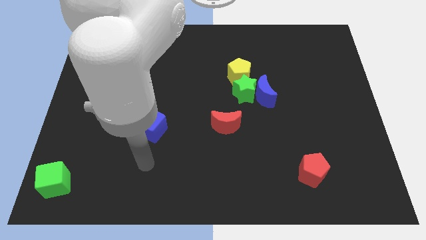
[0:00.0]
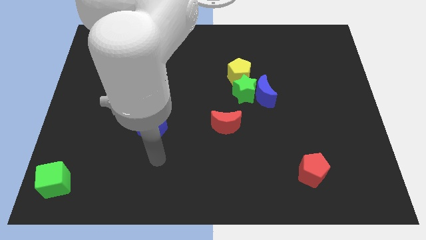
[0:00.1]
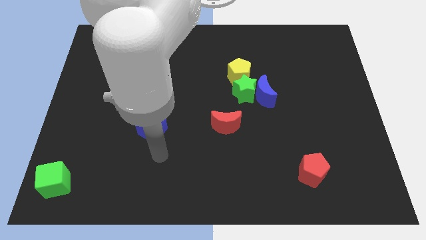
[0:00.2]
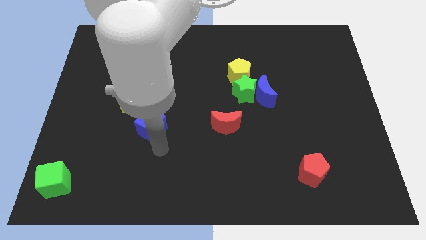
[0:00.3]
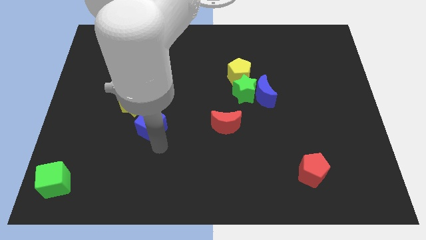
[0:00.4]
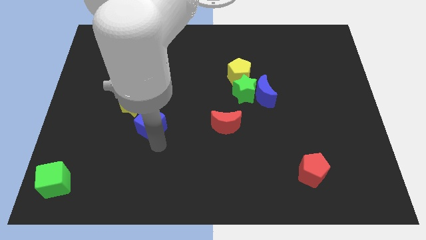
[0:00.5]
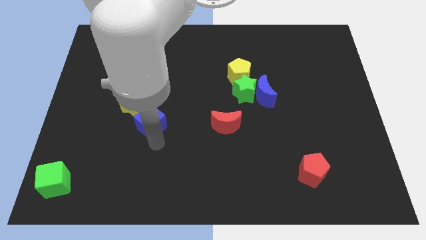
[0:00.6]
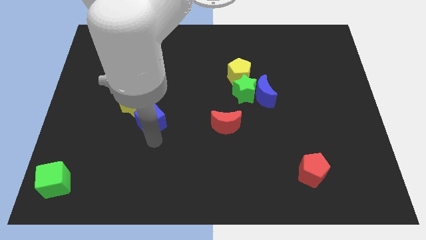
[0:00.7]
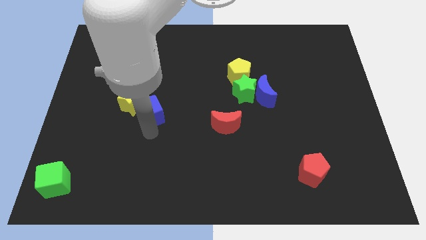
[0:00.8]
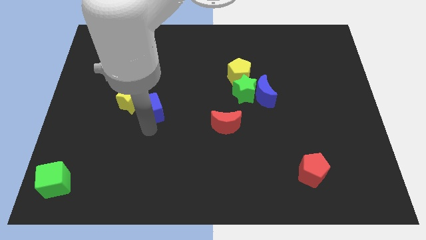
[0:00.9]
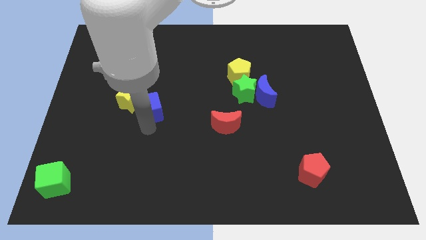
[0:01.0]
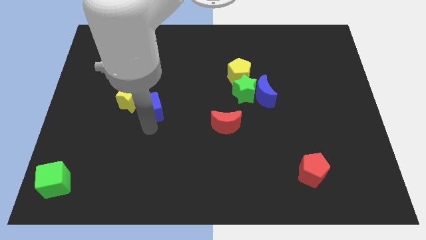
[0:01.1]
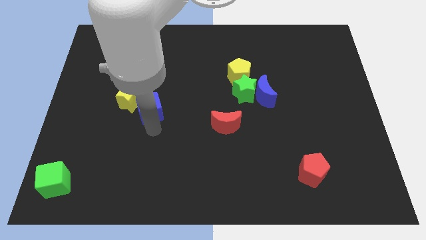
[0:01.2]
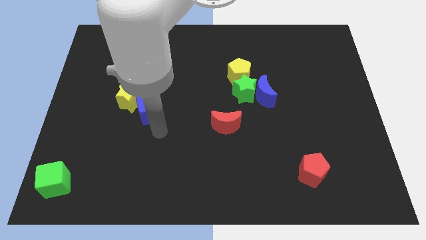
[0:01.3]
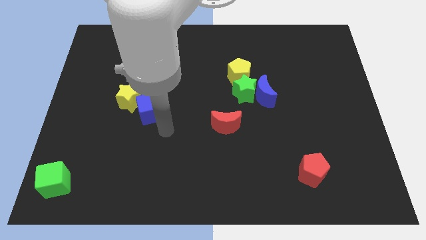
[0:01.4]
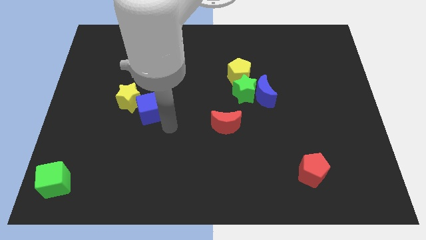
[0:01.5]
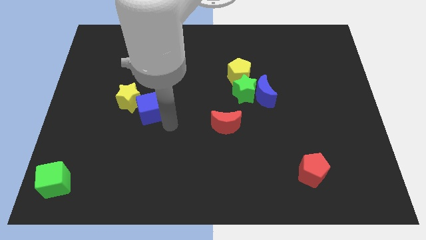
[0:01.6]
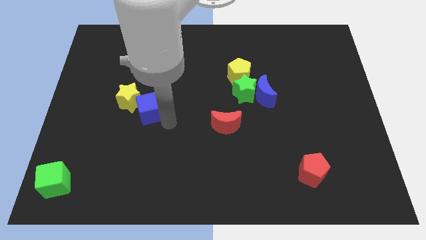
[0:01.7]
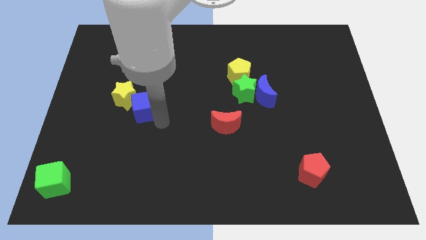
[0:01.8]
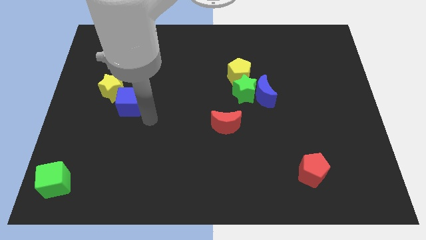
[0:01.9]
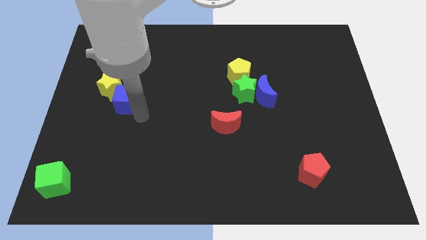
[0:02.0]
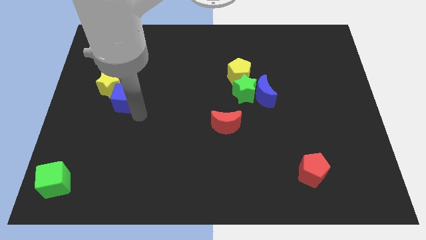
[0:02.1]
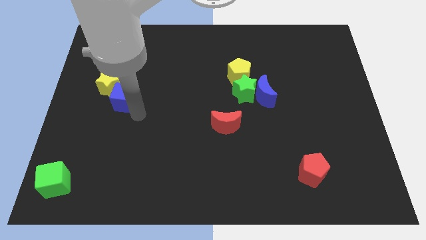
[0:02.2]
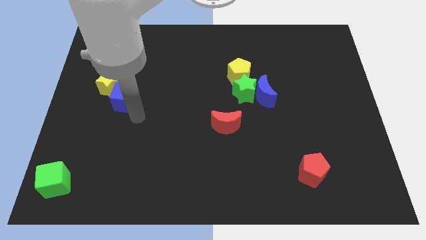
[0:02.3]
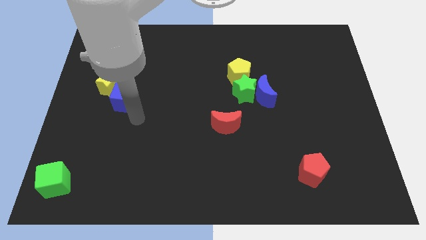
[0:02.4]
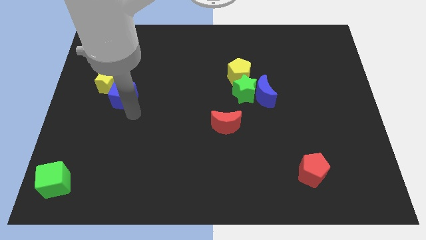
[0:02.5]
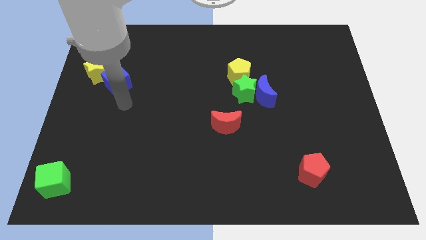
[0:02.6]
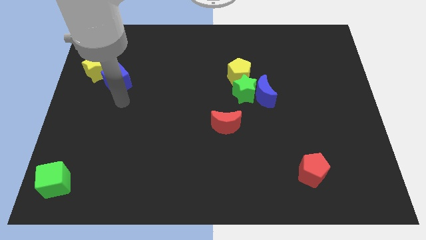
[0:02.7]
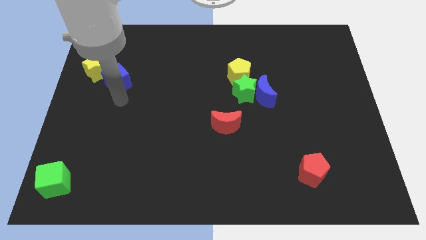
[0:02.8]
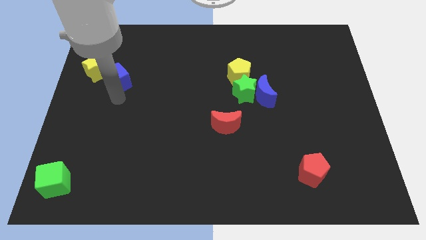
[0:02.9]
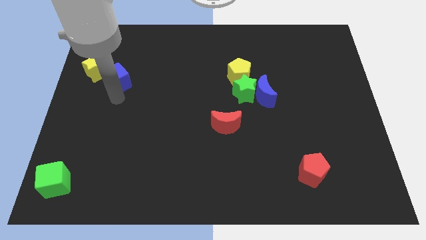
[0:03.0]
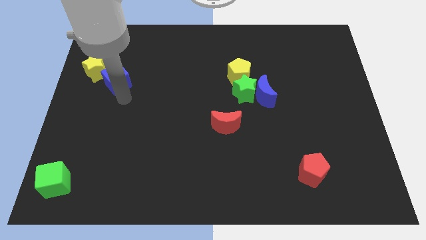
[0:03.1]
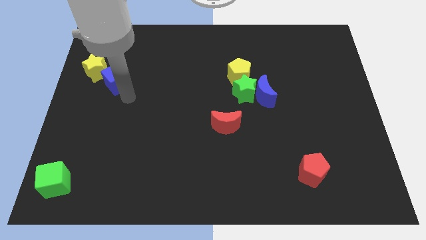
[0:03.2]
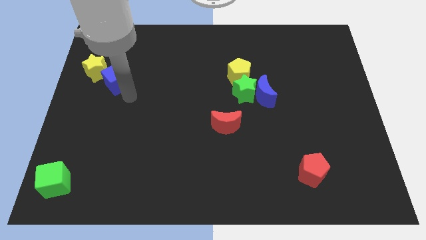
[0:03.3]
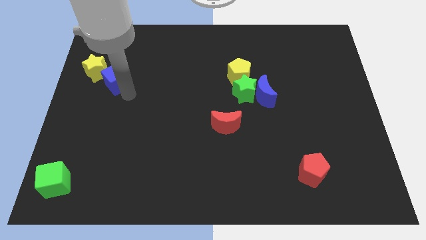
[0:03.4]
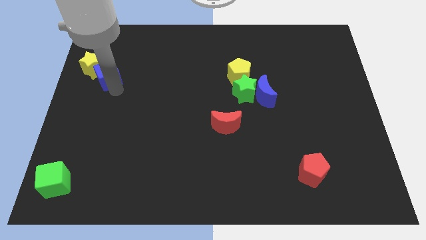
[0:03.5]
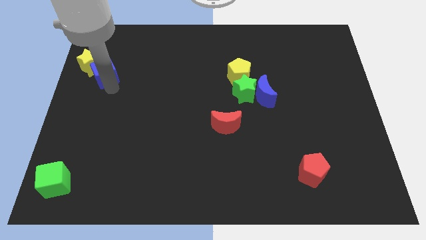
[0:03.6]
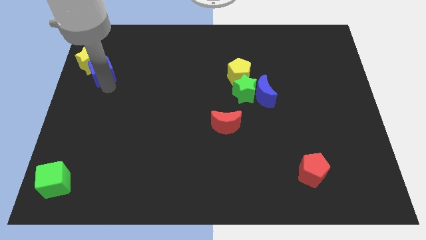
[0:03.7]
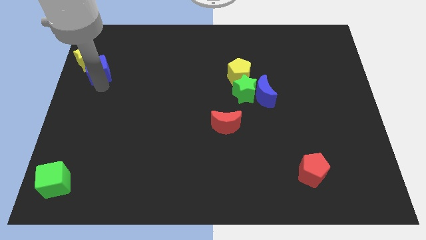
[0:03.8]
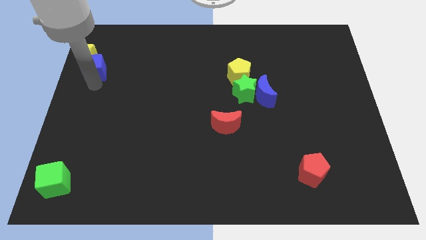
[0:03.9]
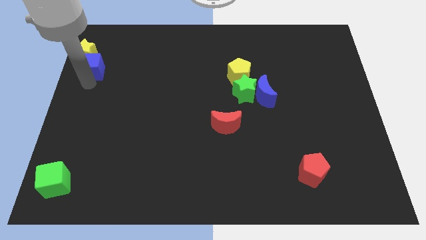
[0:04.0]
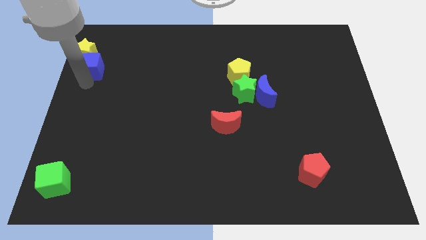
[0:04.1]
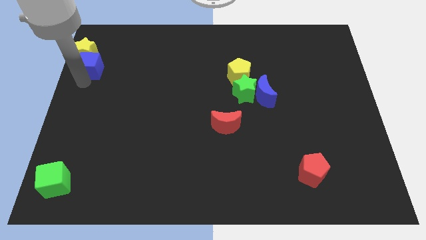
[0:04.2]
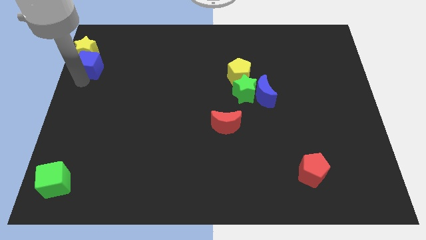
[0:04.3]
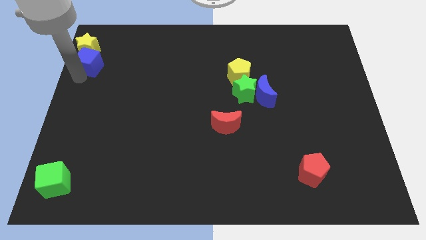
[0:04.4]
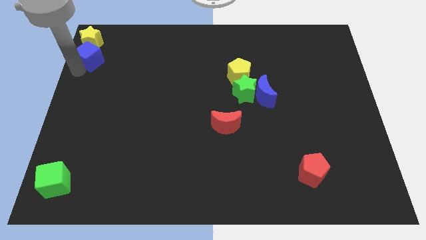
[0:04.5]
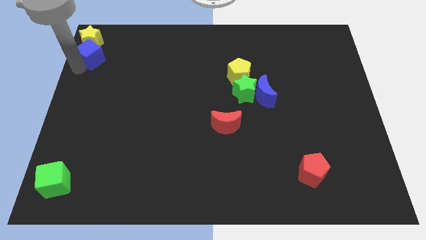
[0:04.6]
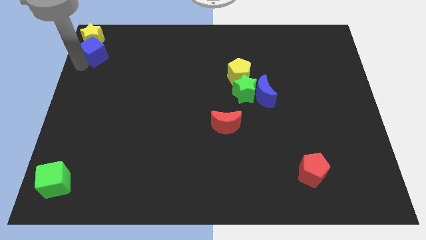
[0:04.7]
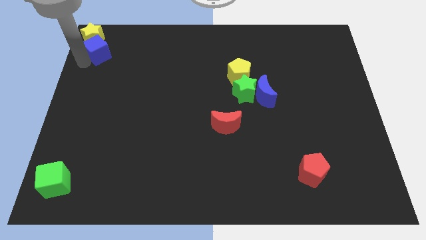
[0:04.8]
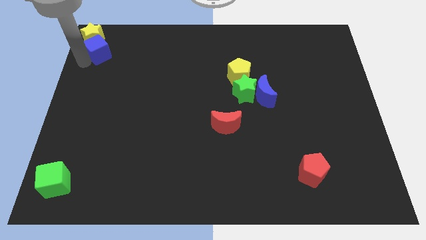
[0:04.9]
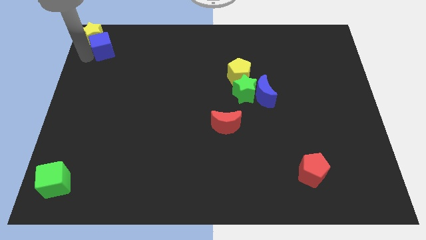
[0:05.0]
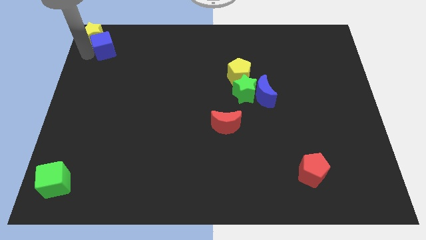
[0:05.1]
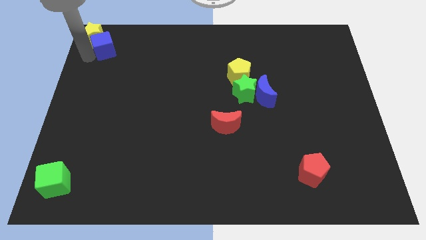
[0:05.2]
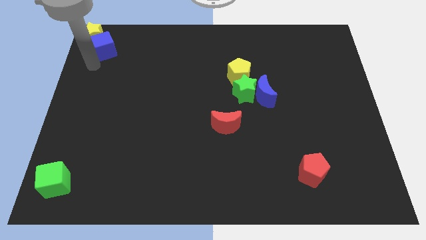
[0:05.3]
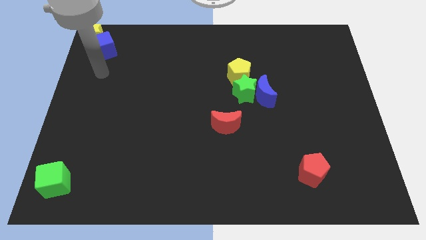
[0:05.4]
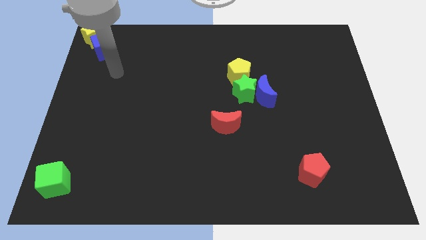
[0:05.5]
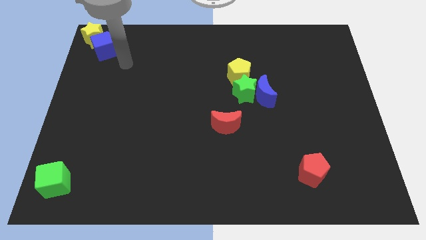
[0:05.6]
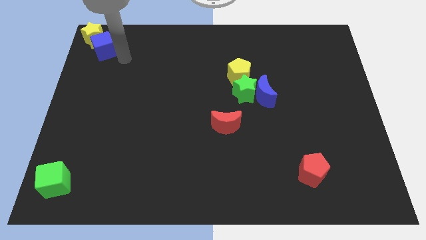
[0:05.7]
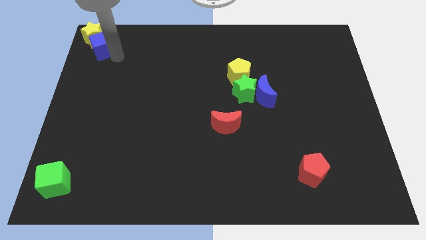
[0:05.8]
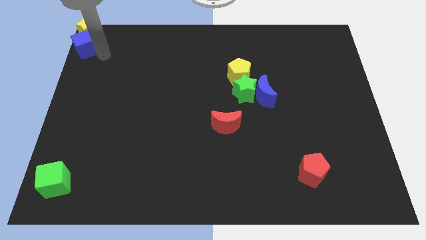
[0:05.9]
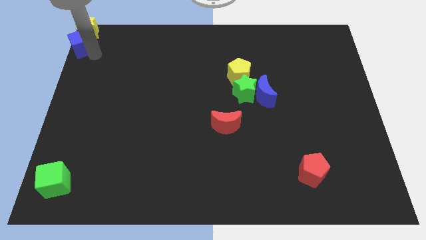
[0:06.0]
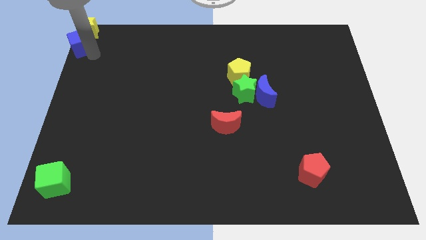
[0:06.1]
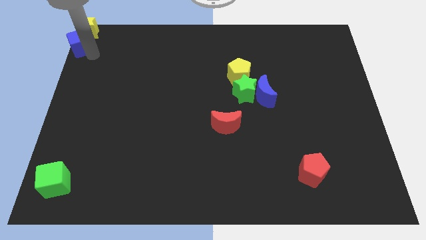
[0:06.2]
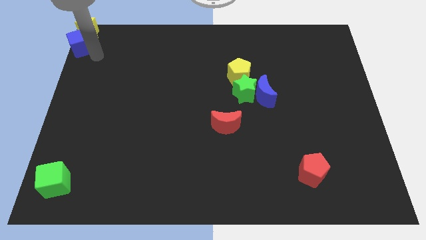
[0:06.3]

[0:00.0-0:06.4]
push the yellow star and the blue cube to the top left corner of the board

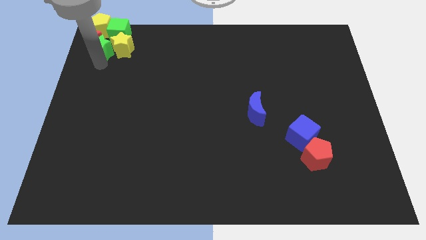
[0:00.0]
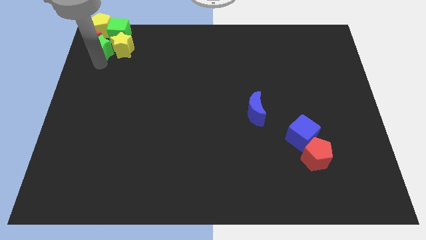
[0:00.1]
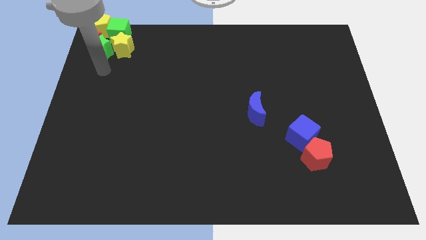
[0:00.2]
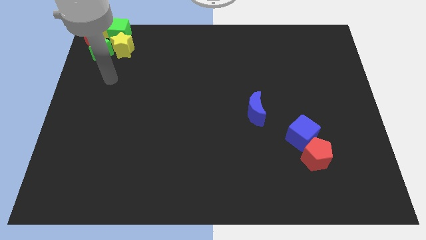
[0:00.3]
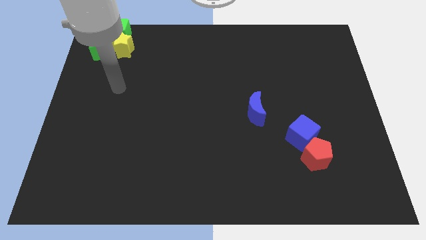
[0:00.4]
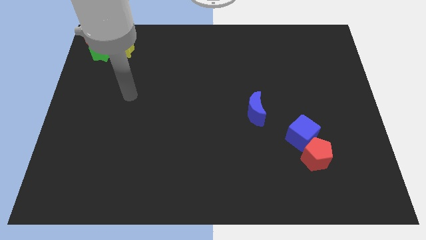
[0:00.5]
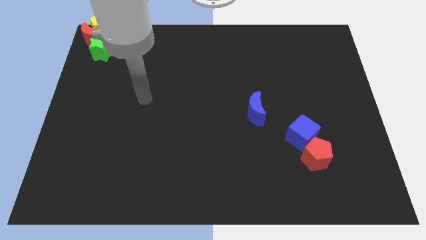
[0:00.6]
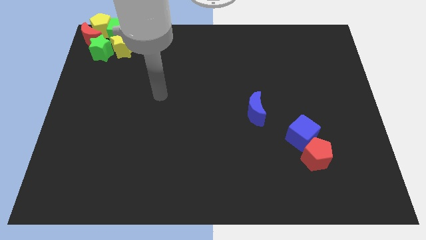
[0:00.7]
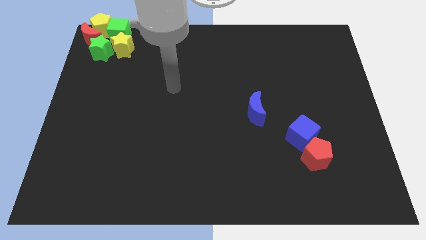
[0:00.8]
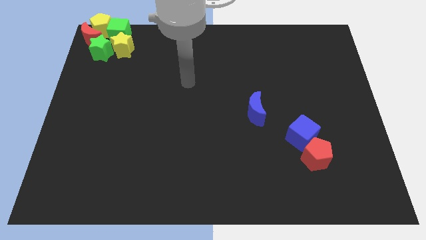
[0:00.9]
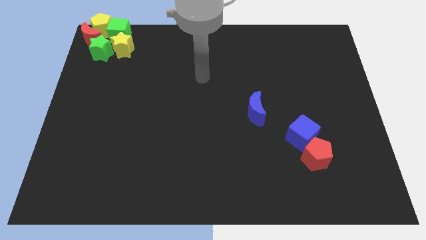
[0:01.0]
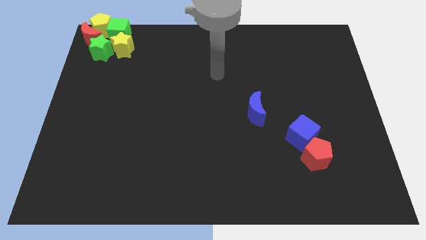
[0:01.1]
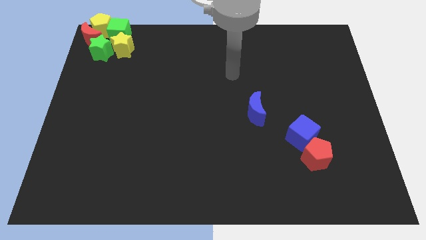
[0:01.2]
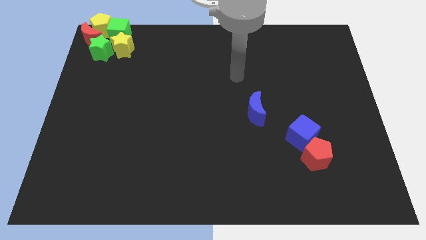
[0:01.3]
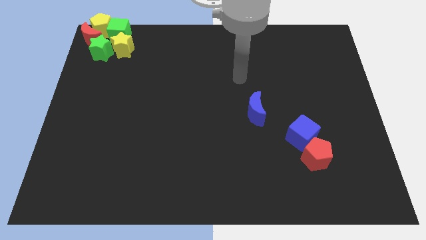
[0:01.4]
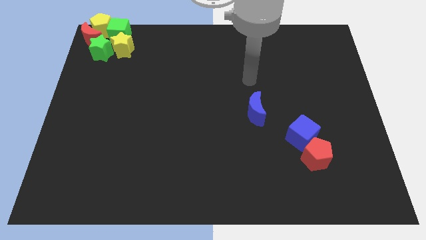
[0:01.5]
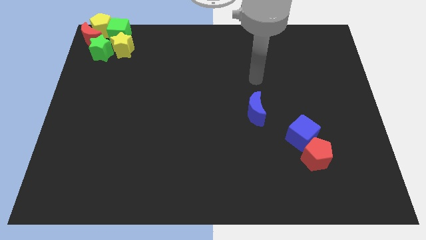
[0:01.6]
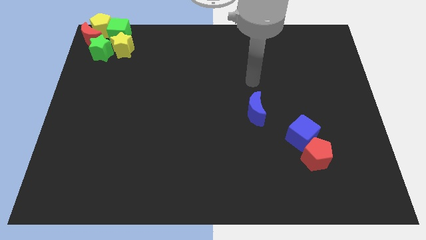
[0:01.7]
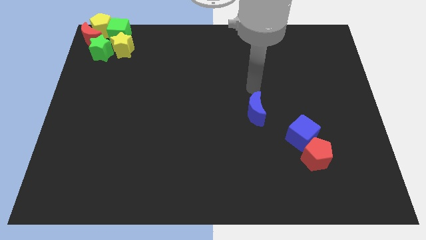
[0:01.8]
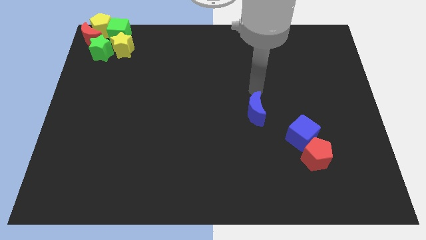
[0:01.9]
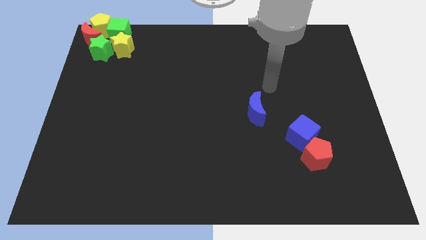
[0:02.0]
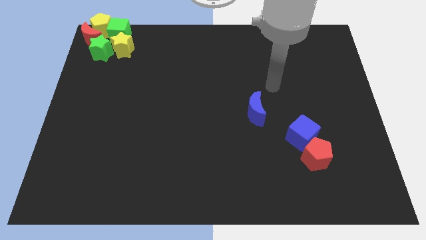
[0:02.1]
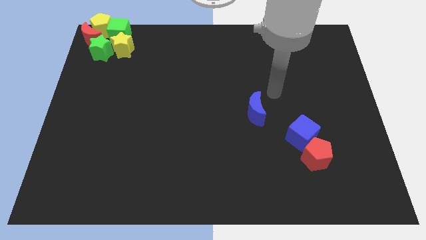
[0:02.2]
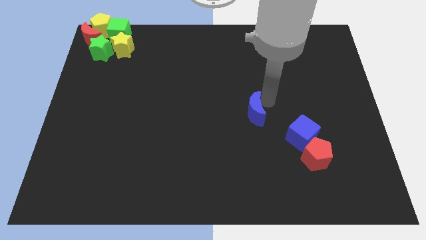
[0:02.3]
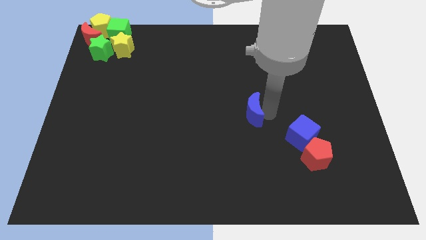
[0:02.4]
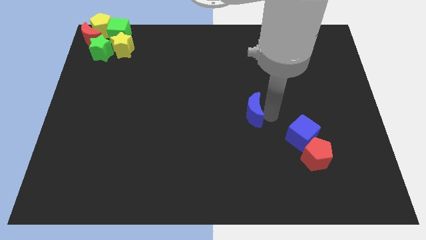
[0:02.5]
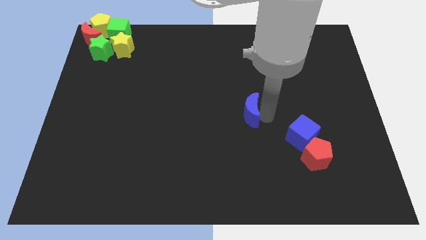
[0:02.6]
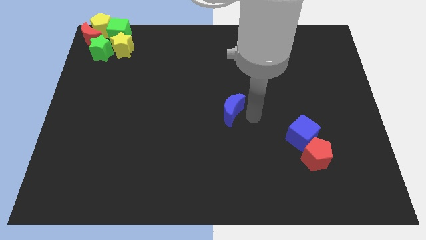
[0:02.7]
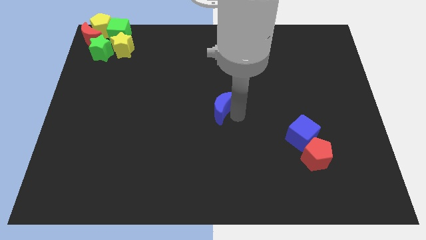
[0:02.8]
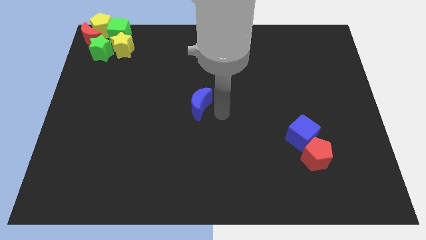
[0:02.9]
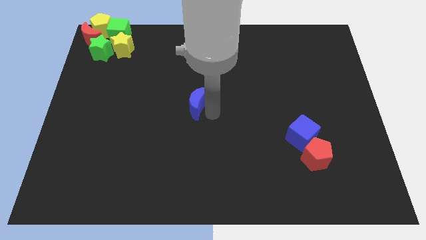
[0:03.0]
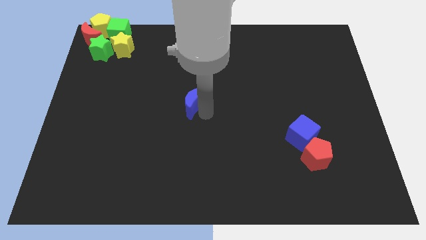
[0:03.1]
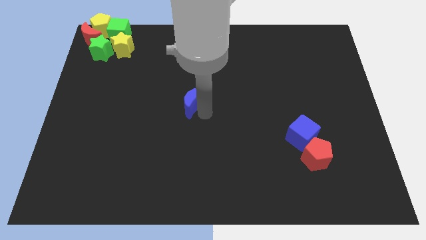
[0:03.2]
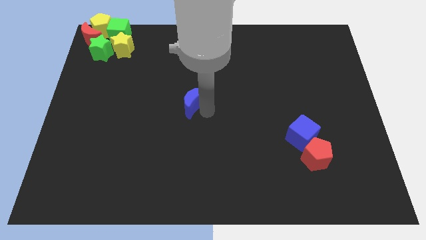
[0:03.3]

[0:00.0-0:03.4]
drag the blue crescent slightly towards the top left
